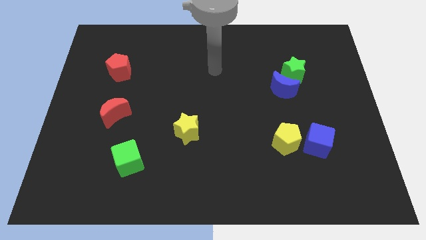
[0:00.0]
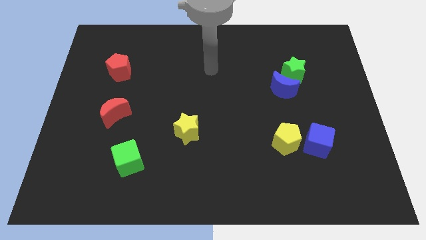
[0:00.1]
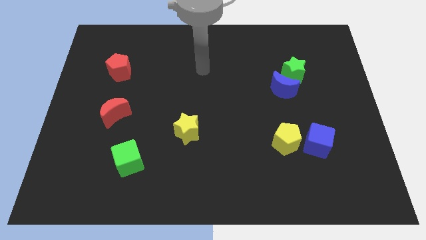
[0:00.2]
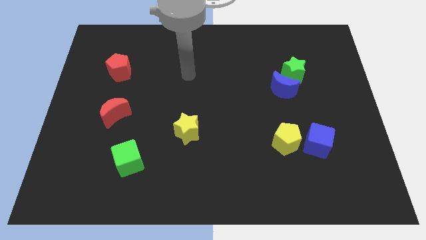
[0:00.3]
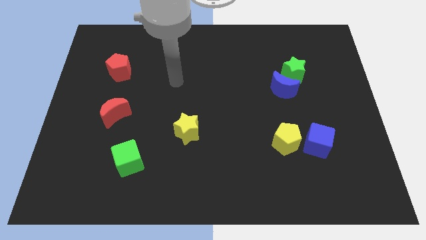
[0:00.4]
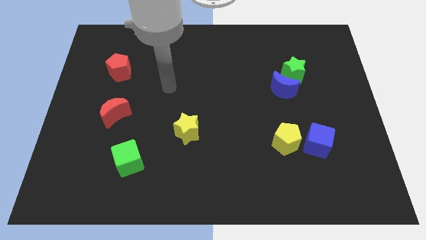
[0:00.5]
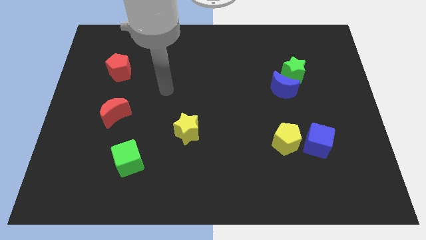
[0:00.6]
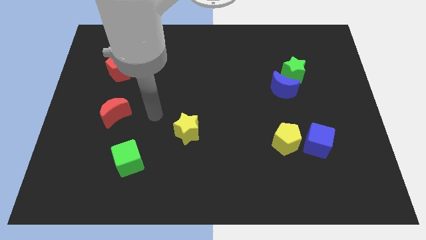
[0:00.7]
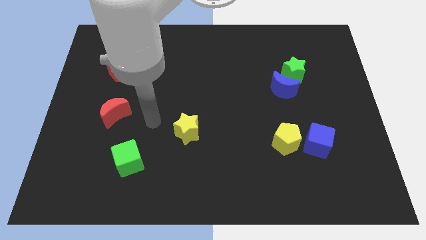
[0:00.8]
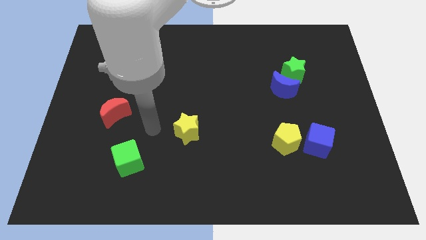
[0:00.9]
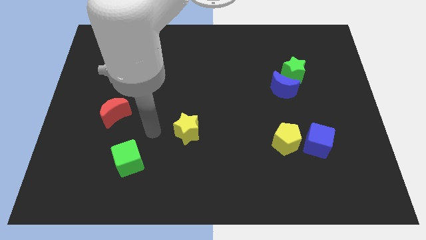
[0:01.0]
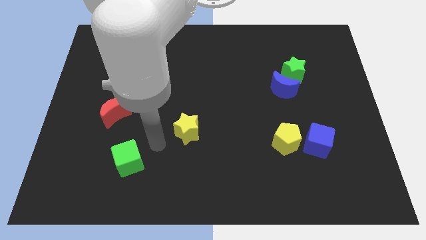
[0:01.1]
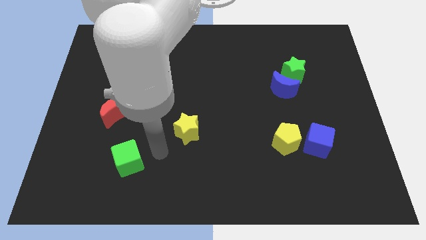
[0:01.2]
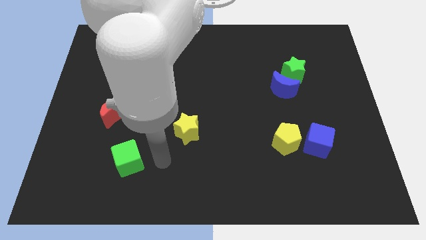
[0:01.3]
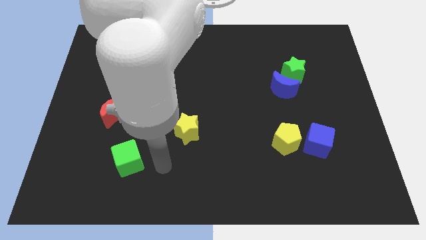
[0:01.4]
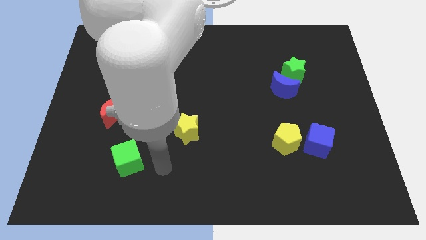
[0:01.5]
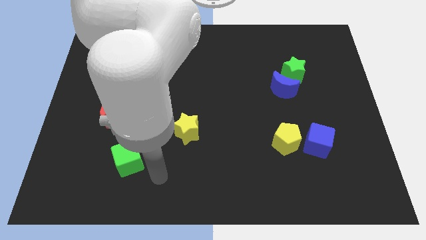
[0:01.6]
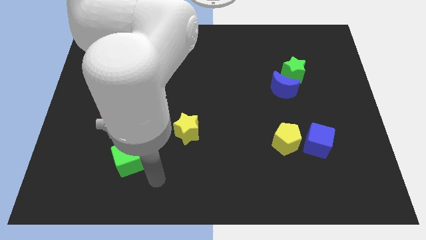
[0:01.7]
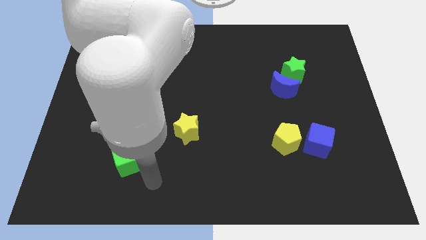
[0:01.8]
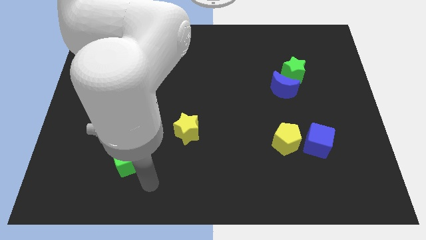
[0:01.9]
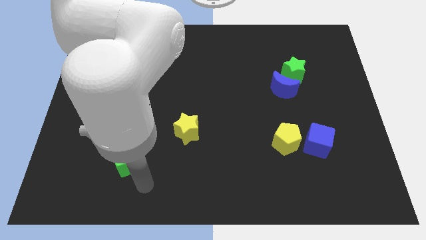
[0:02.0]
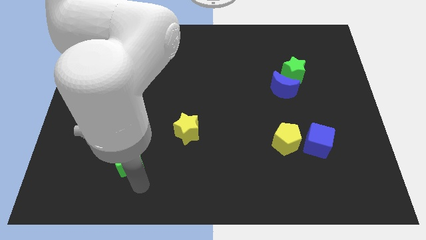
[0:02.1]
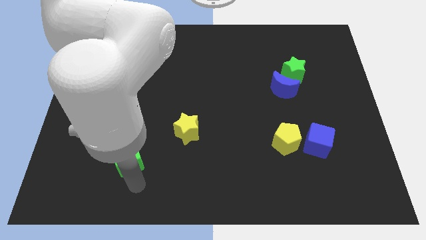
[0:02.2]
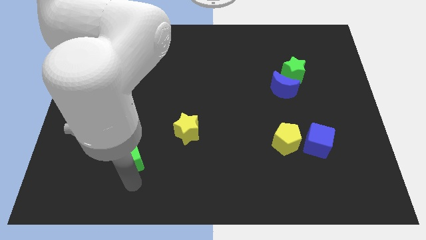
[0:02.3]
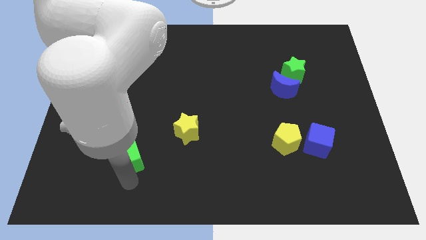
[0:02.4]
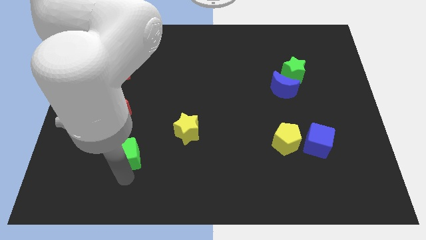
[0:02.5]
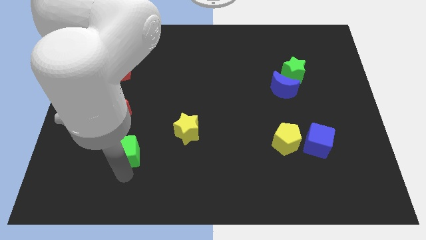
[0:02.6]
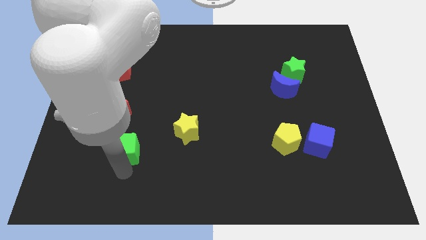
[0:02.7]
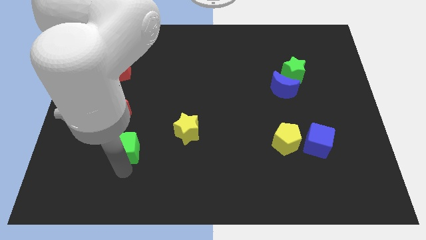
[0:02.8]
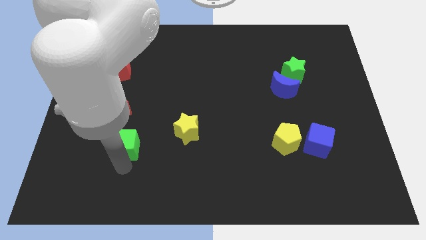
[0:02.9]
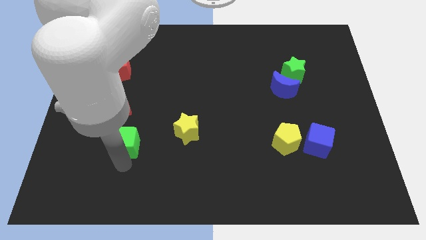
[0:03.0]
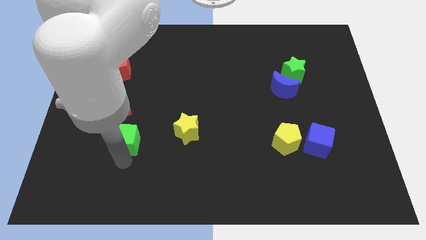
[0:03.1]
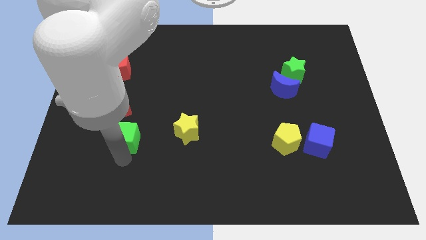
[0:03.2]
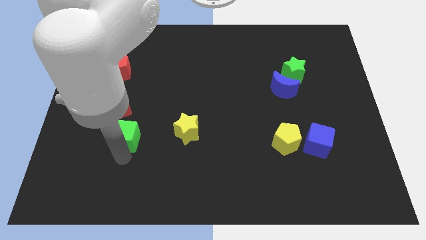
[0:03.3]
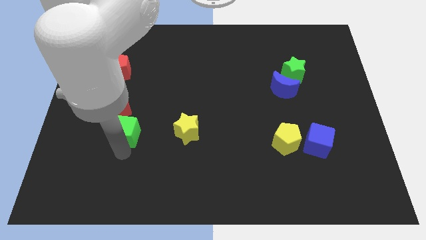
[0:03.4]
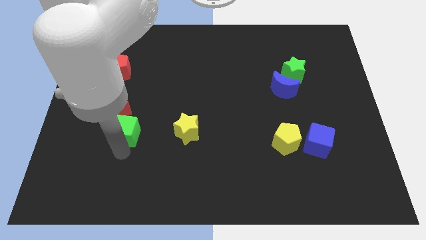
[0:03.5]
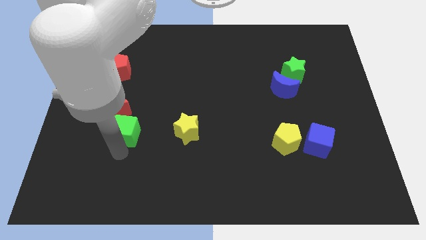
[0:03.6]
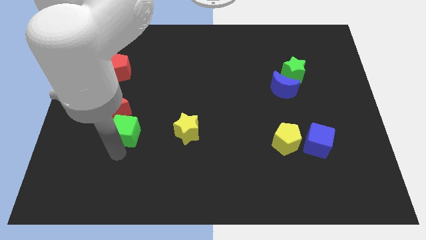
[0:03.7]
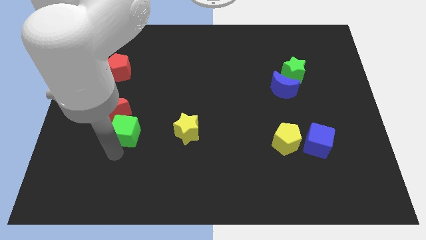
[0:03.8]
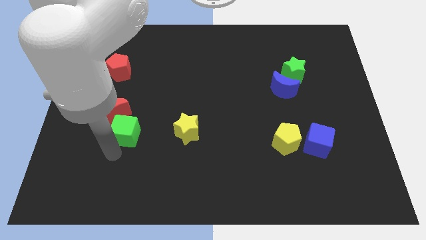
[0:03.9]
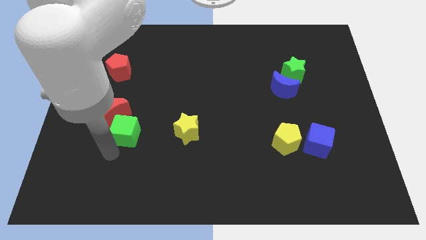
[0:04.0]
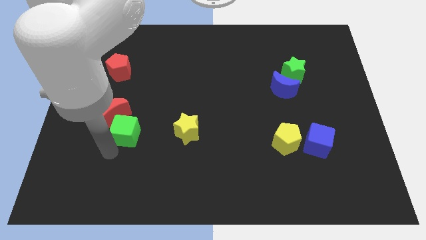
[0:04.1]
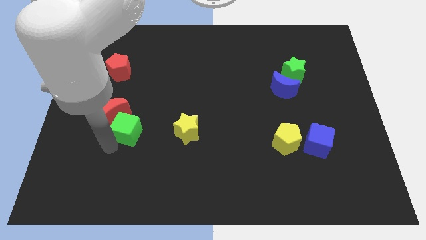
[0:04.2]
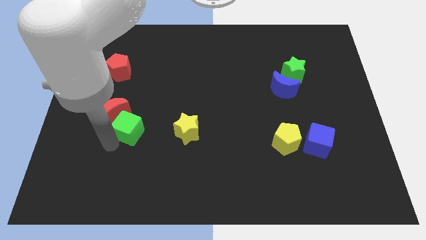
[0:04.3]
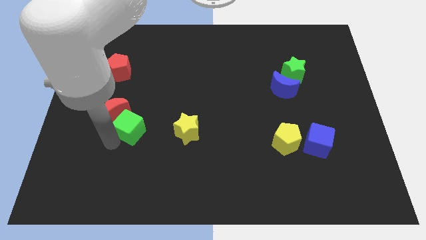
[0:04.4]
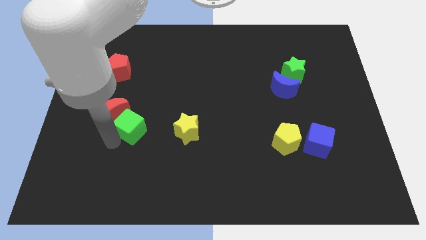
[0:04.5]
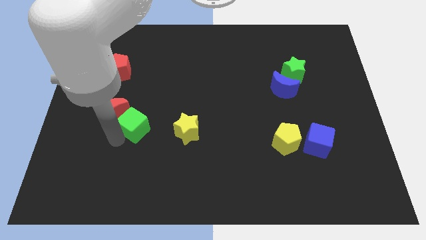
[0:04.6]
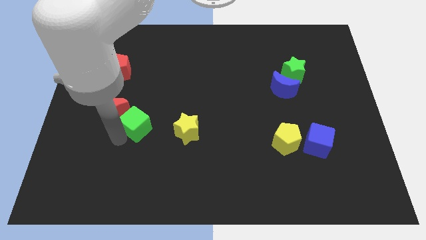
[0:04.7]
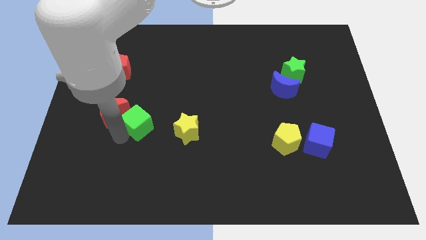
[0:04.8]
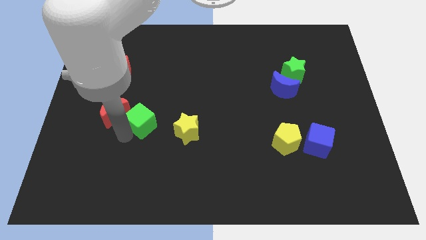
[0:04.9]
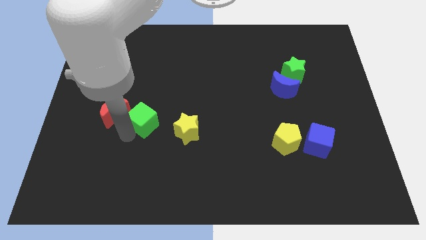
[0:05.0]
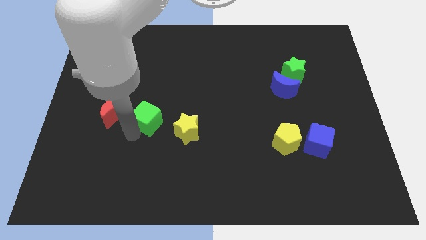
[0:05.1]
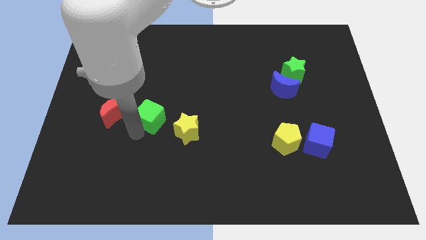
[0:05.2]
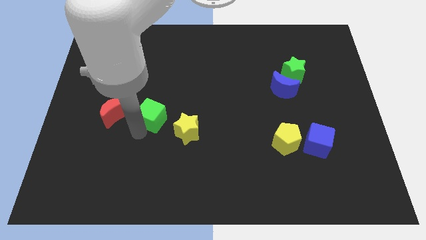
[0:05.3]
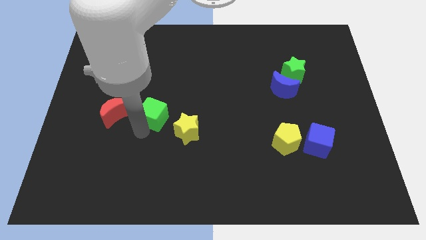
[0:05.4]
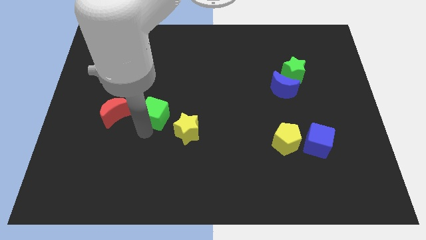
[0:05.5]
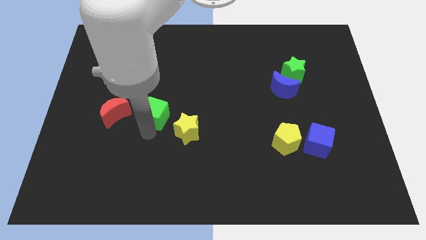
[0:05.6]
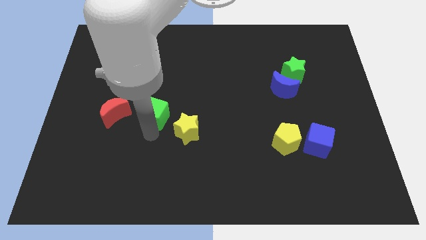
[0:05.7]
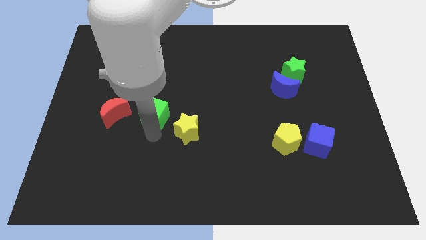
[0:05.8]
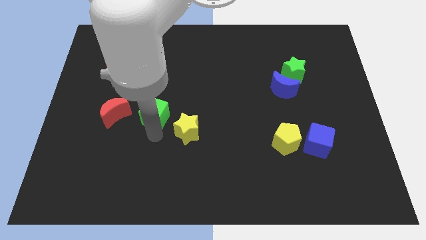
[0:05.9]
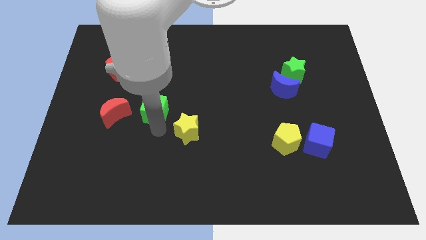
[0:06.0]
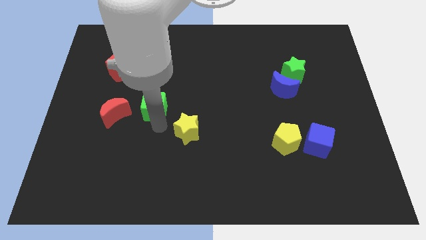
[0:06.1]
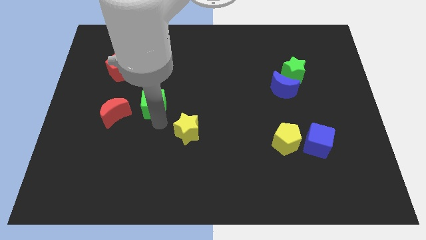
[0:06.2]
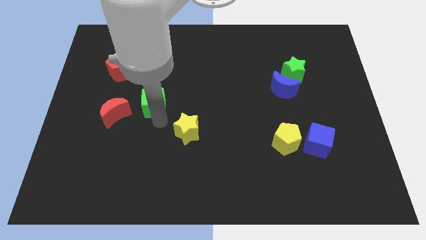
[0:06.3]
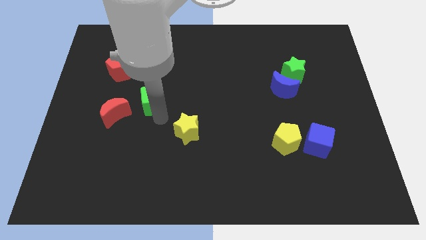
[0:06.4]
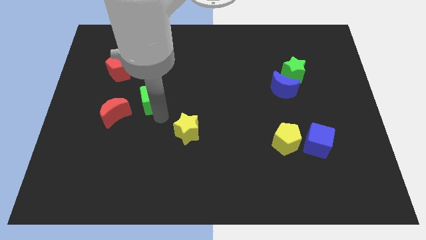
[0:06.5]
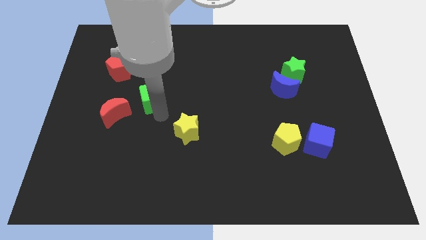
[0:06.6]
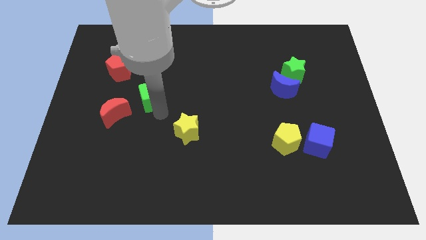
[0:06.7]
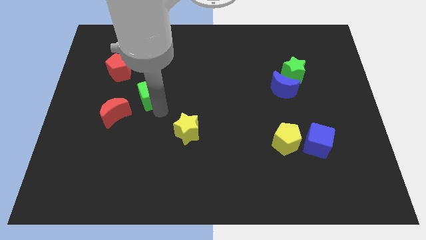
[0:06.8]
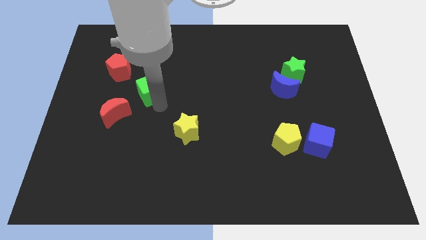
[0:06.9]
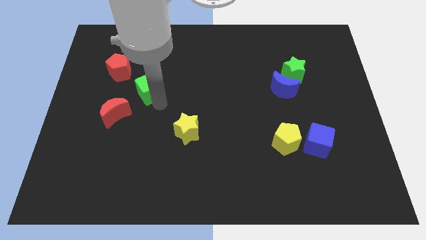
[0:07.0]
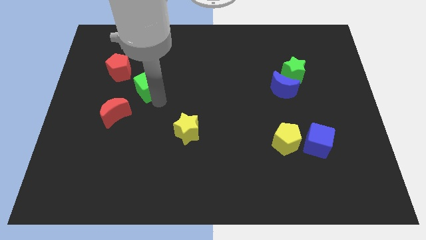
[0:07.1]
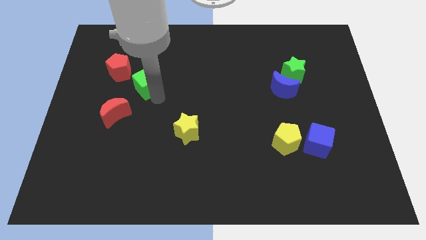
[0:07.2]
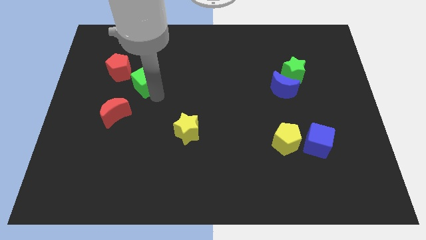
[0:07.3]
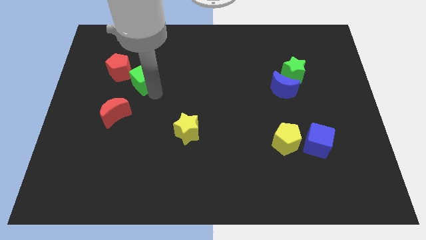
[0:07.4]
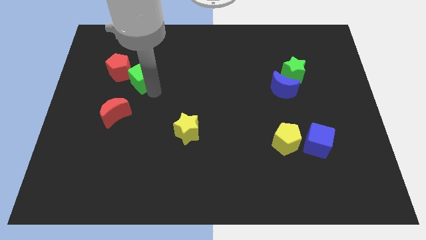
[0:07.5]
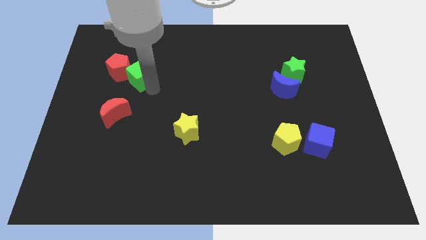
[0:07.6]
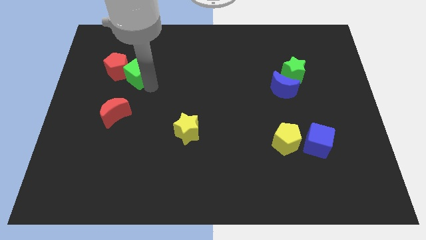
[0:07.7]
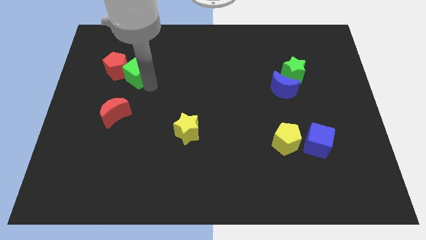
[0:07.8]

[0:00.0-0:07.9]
push the green cube next to the red pentagon

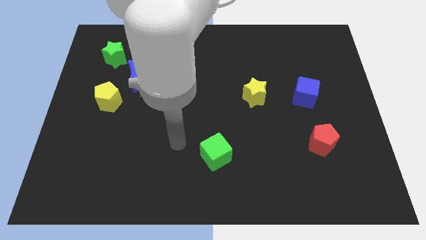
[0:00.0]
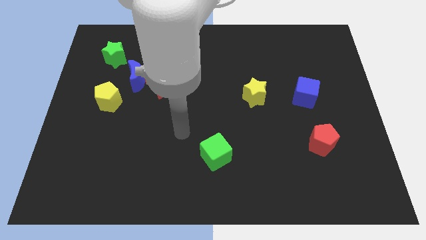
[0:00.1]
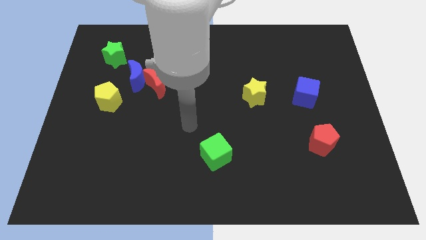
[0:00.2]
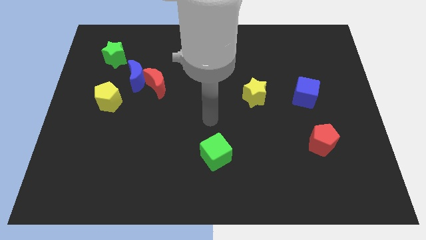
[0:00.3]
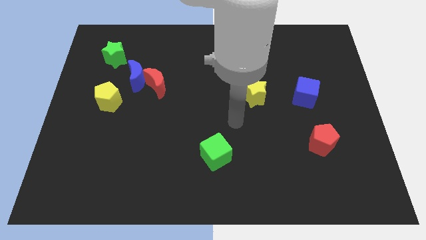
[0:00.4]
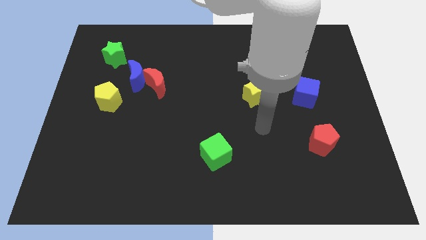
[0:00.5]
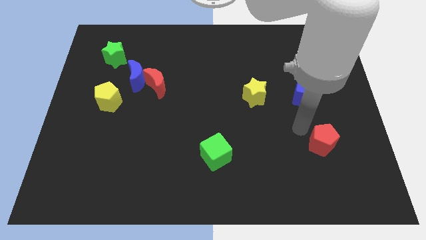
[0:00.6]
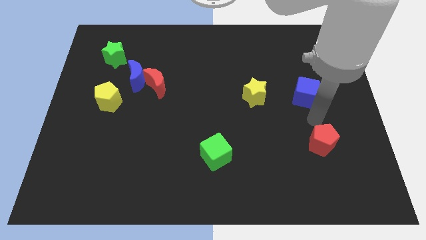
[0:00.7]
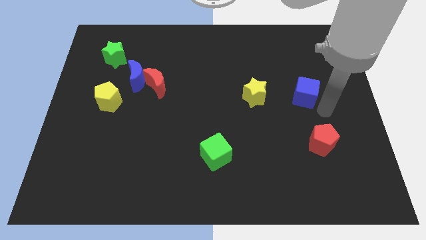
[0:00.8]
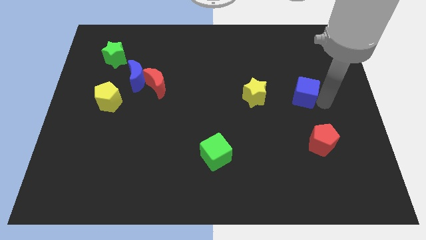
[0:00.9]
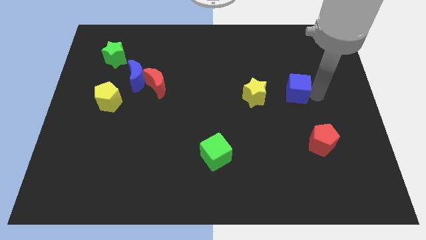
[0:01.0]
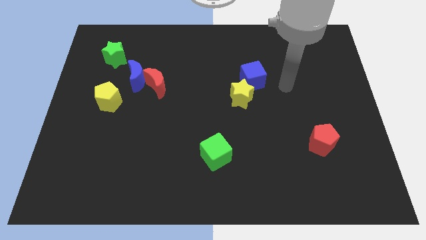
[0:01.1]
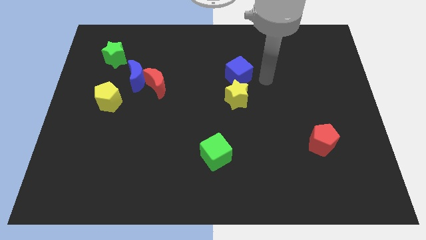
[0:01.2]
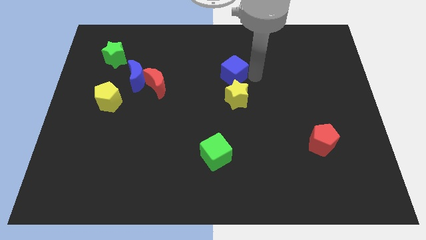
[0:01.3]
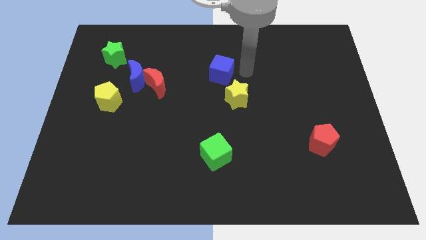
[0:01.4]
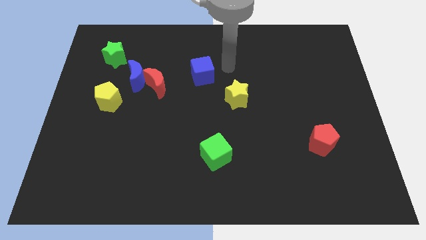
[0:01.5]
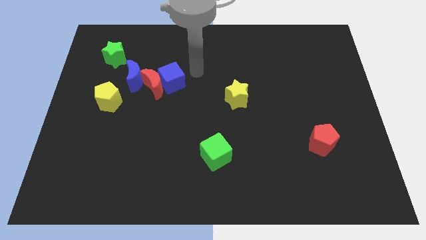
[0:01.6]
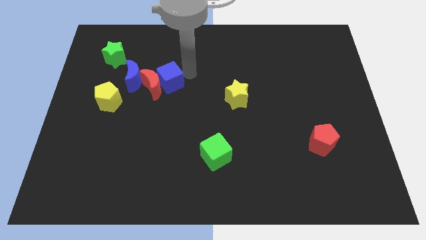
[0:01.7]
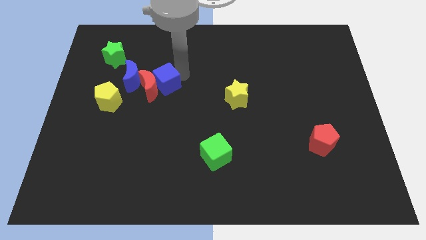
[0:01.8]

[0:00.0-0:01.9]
push the blue cube next to the red moon
